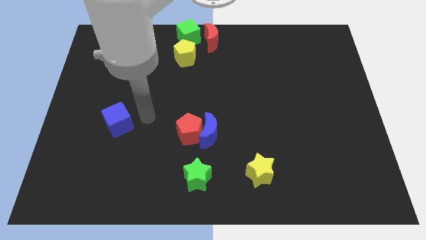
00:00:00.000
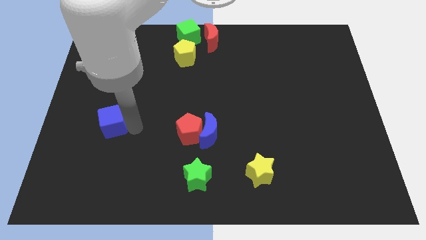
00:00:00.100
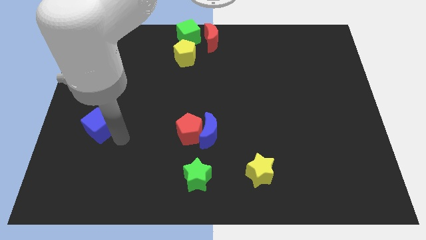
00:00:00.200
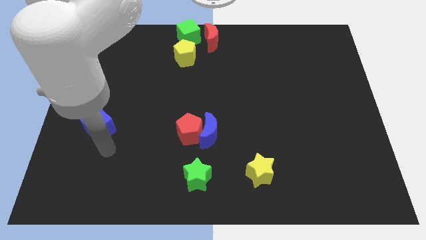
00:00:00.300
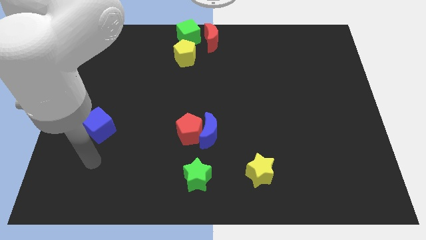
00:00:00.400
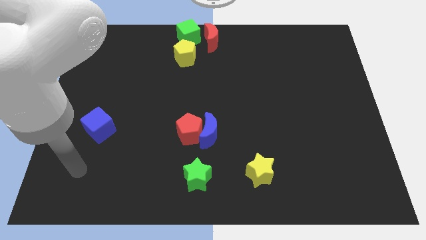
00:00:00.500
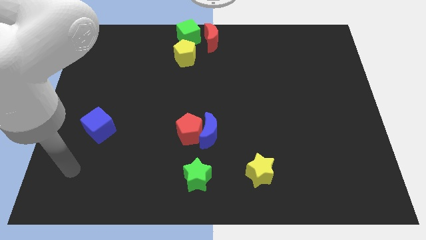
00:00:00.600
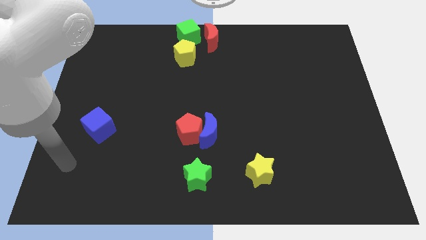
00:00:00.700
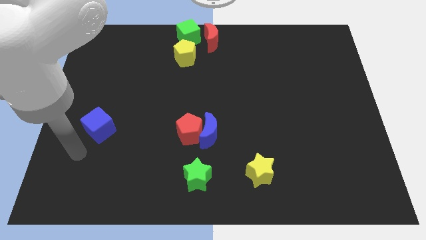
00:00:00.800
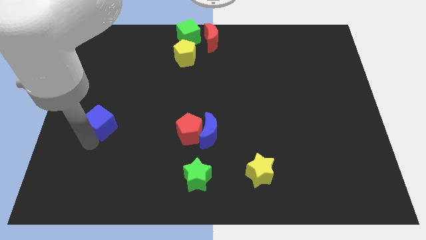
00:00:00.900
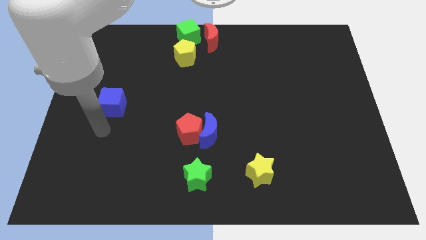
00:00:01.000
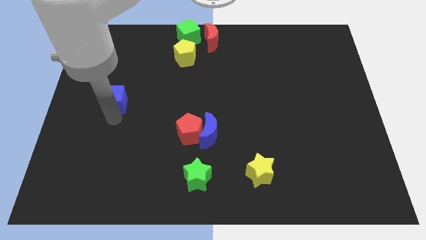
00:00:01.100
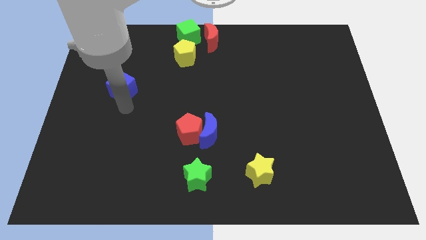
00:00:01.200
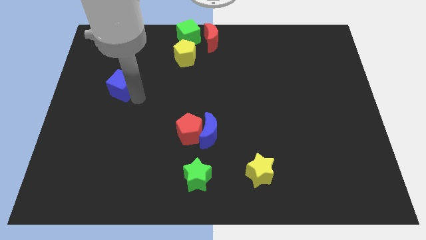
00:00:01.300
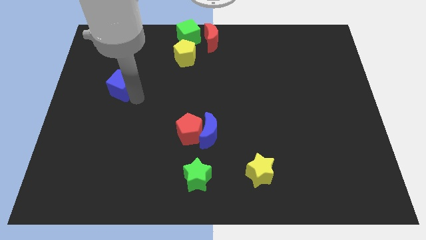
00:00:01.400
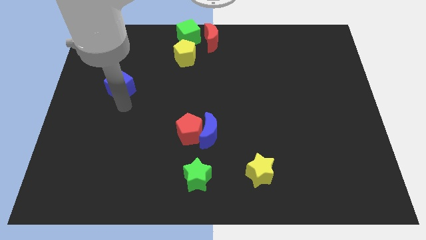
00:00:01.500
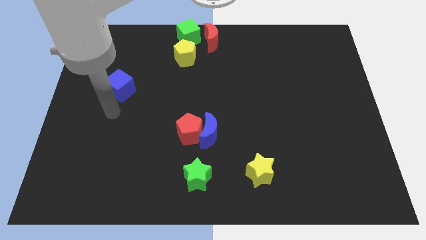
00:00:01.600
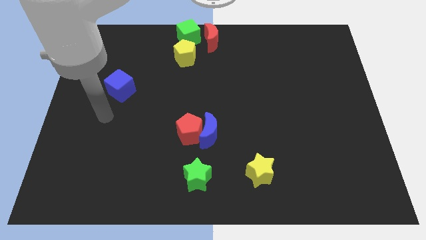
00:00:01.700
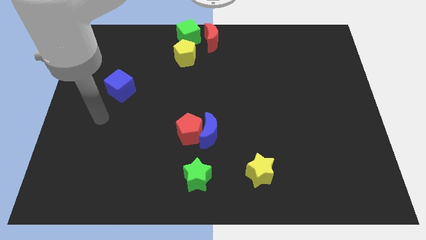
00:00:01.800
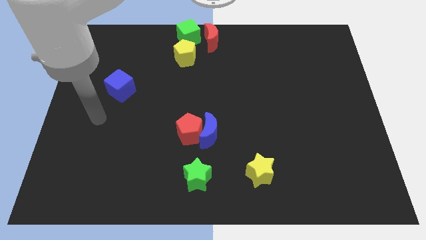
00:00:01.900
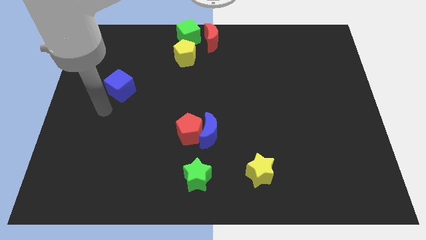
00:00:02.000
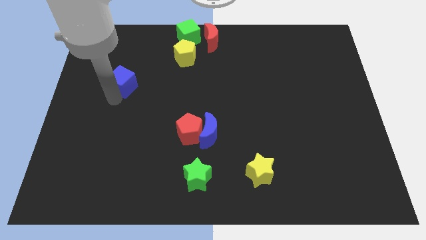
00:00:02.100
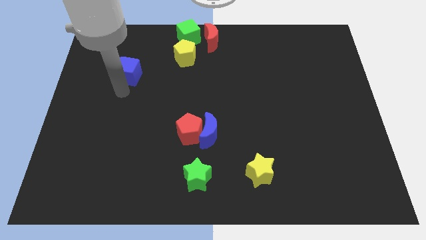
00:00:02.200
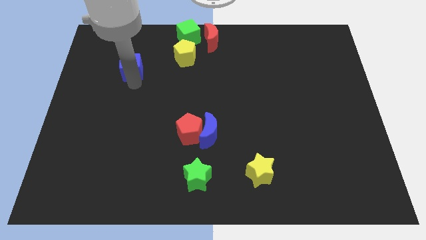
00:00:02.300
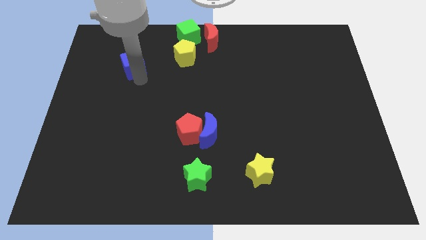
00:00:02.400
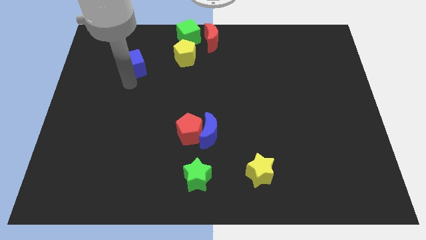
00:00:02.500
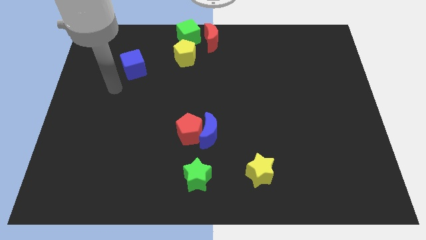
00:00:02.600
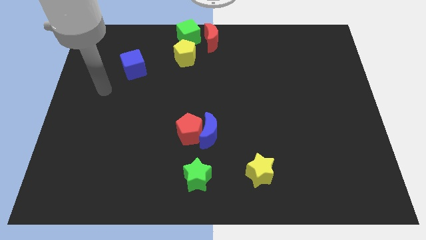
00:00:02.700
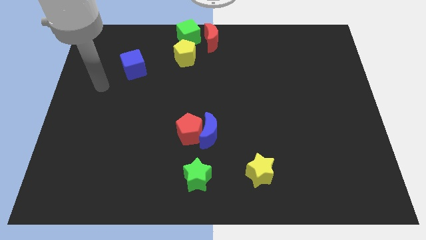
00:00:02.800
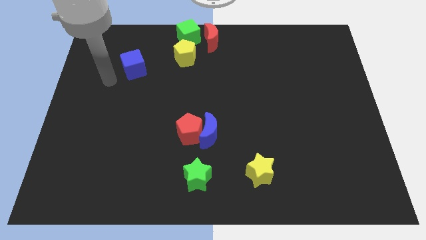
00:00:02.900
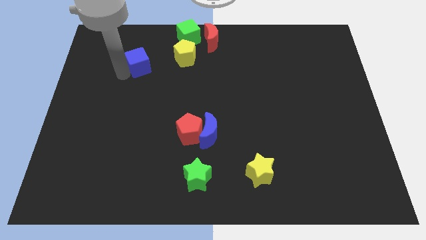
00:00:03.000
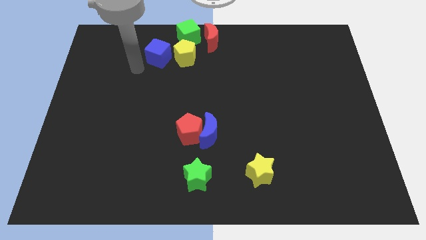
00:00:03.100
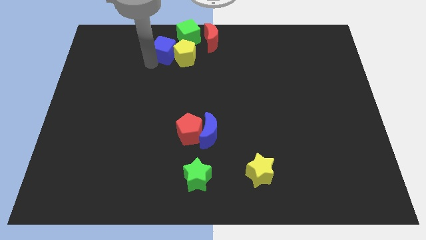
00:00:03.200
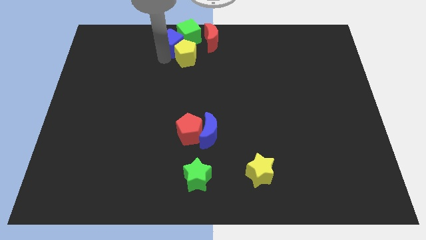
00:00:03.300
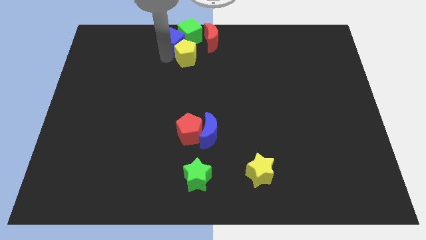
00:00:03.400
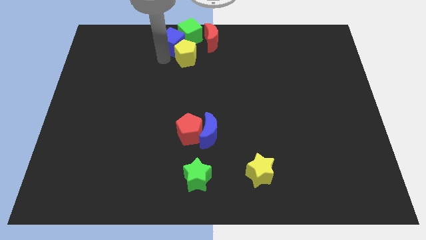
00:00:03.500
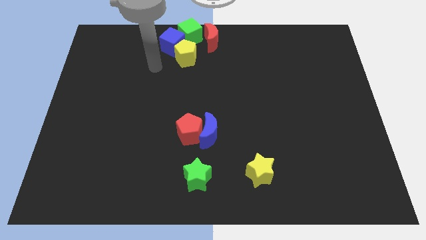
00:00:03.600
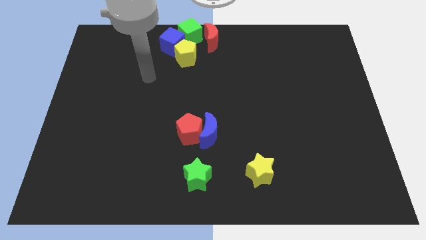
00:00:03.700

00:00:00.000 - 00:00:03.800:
push the blue cube towards the group of blocks at the top center of the board

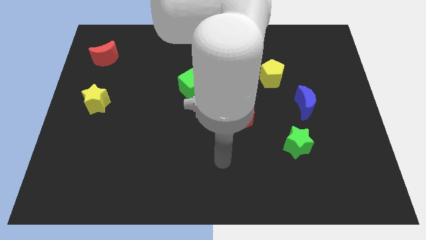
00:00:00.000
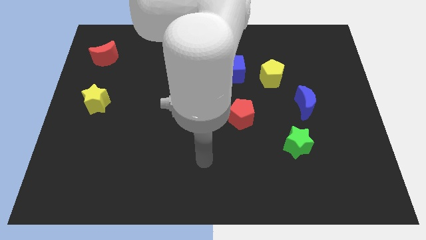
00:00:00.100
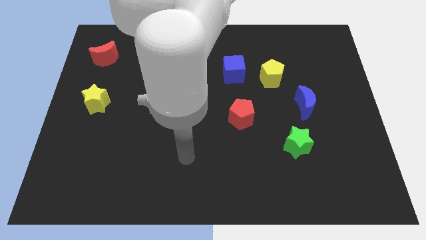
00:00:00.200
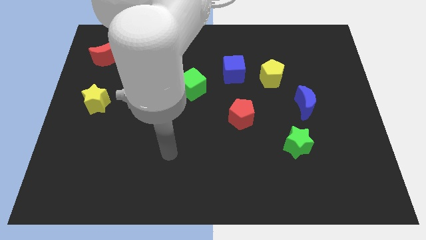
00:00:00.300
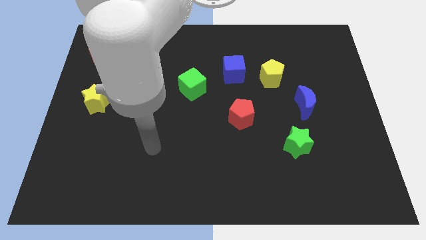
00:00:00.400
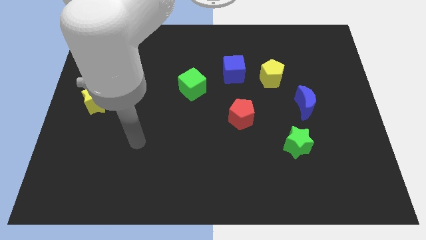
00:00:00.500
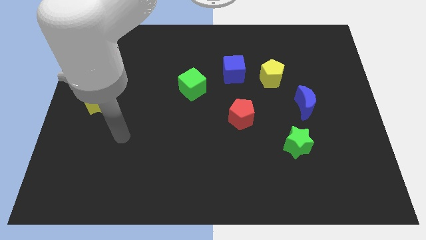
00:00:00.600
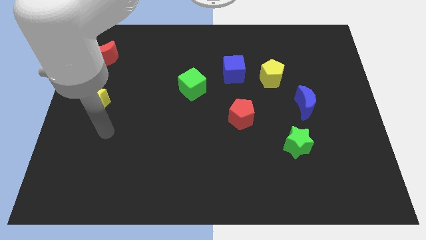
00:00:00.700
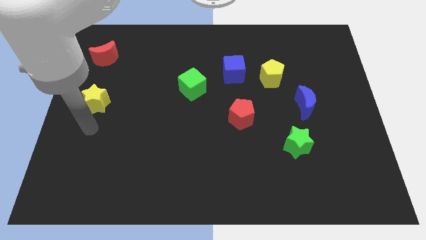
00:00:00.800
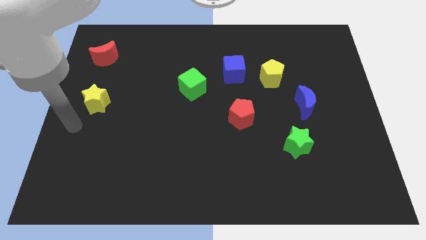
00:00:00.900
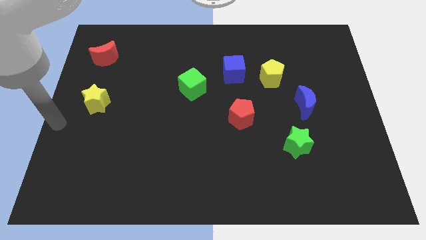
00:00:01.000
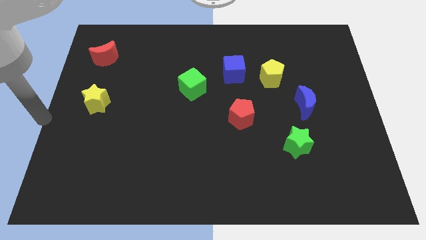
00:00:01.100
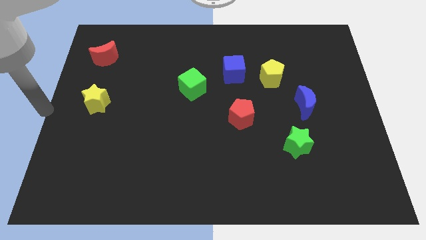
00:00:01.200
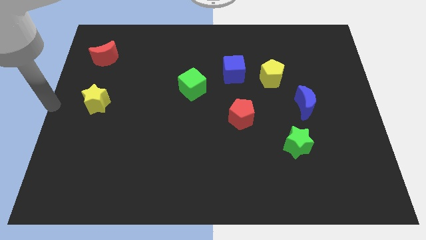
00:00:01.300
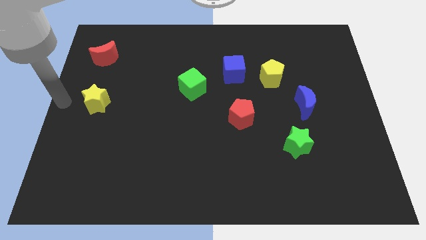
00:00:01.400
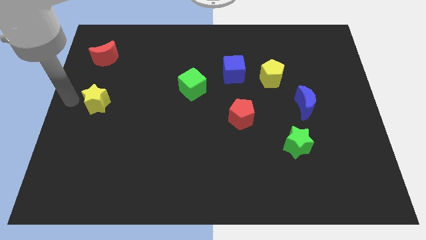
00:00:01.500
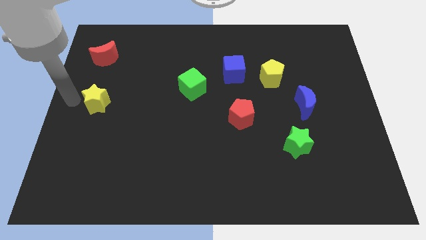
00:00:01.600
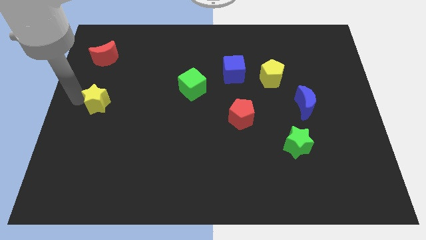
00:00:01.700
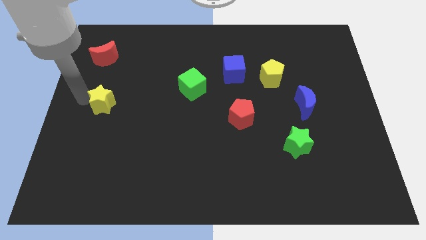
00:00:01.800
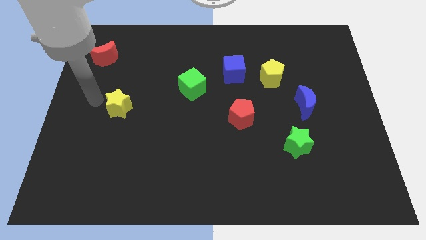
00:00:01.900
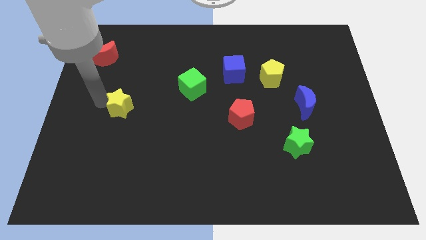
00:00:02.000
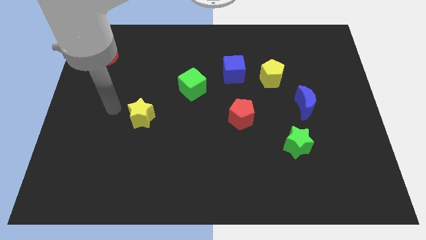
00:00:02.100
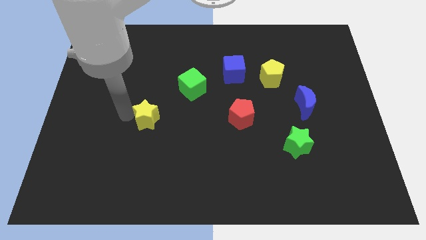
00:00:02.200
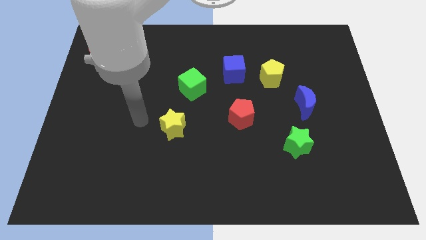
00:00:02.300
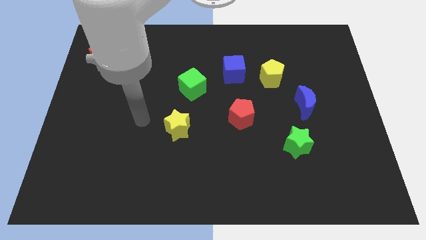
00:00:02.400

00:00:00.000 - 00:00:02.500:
place the yellow star below the green cube

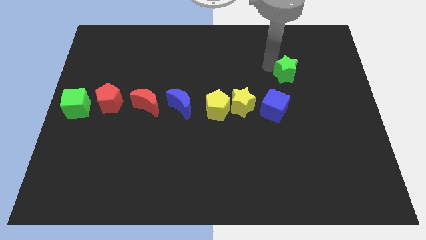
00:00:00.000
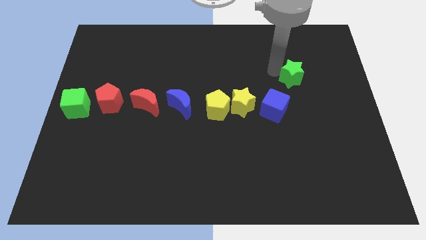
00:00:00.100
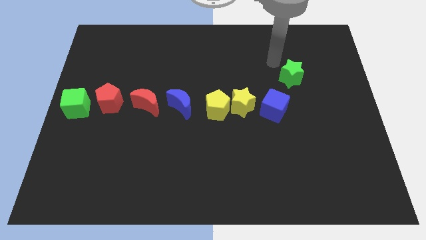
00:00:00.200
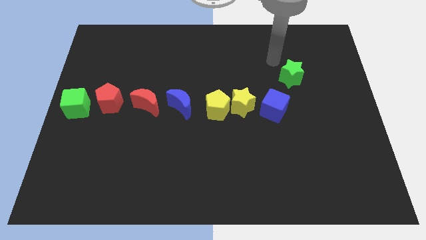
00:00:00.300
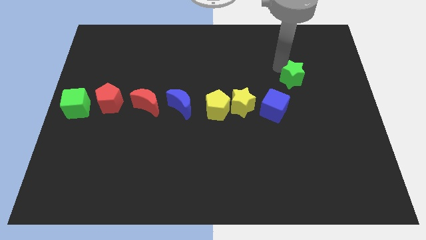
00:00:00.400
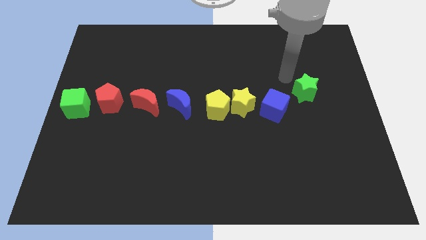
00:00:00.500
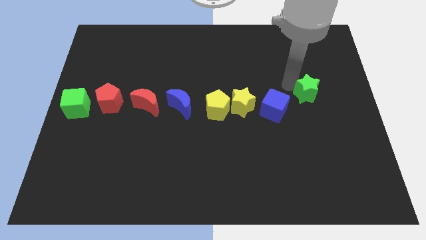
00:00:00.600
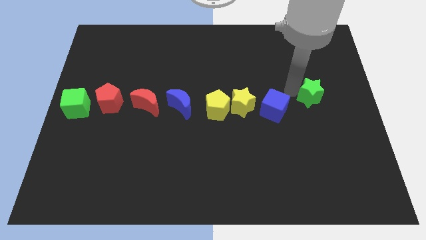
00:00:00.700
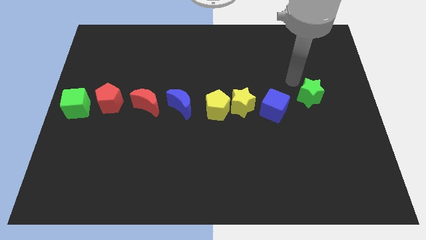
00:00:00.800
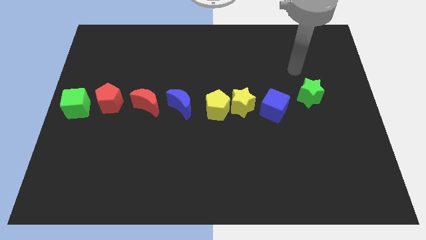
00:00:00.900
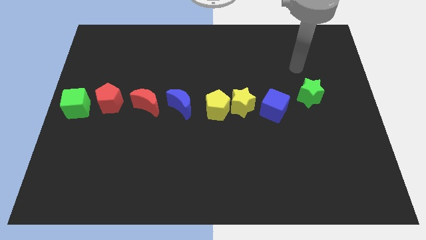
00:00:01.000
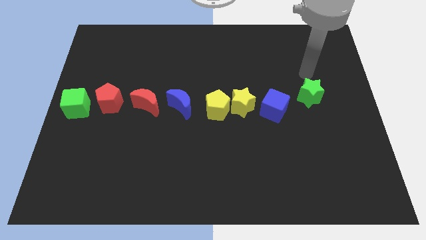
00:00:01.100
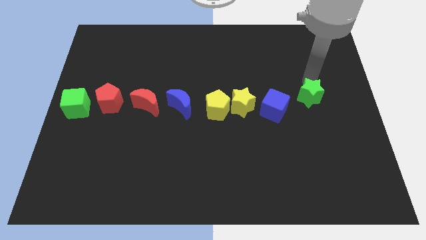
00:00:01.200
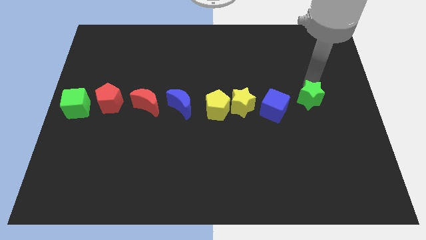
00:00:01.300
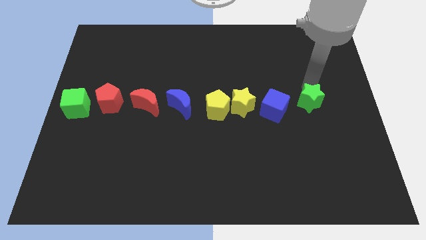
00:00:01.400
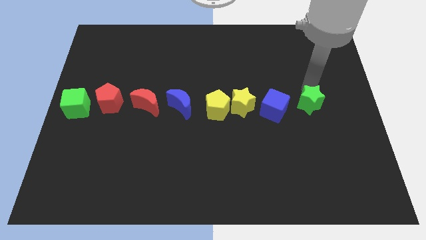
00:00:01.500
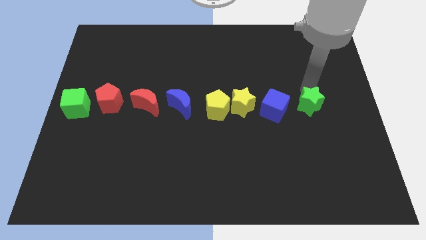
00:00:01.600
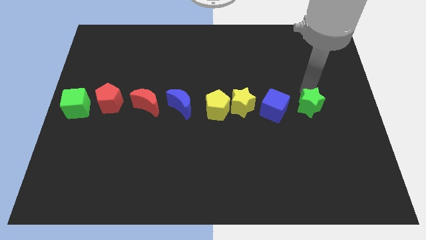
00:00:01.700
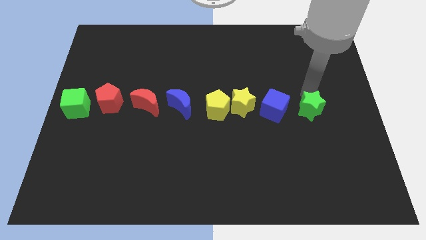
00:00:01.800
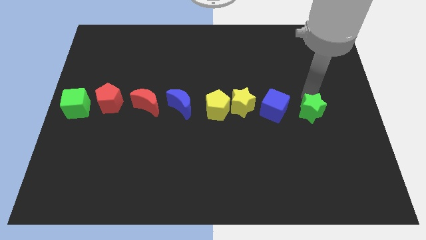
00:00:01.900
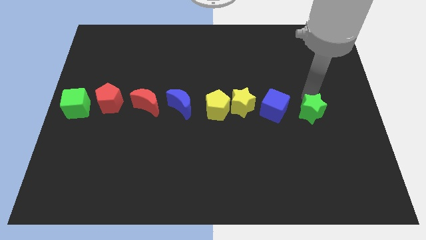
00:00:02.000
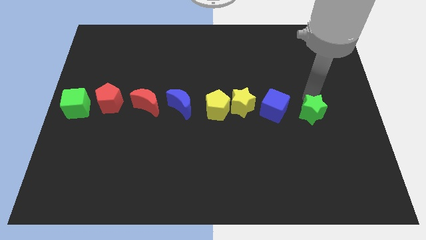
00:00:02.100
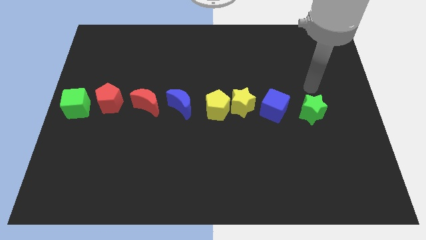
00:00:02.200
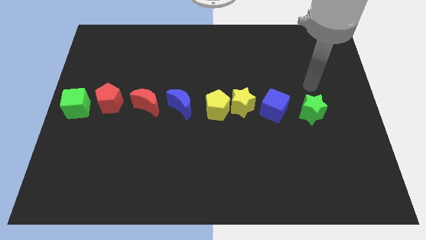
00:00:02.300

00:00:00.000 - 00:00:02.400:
place the green star parallel to blue cube

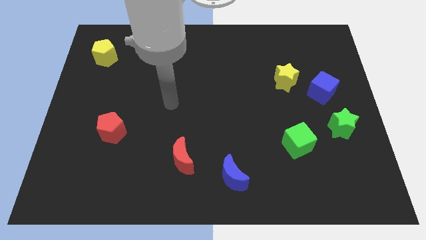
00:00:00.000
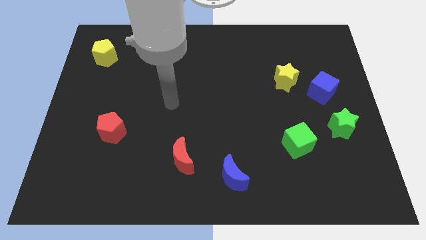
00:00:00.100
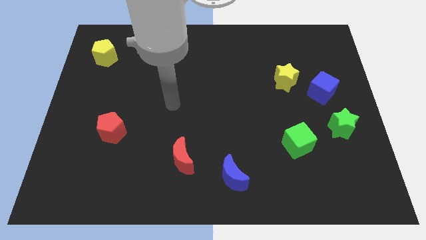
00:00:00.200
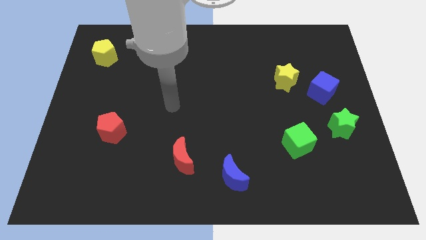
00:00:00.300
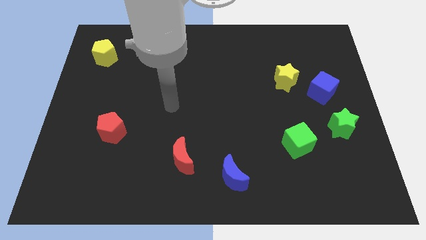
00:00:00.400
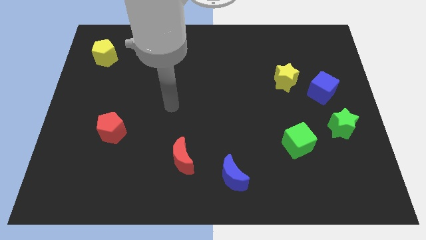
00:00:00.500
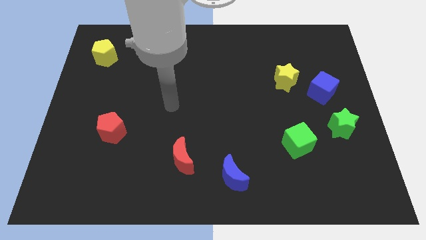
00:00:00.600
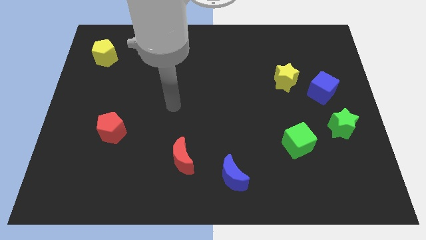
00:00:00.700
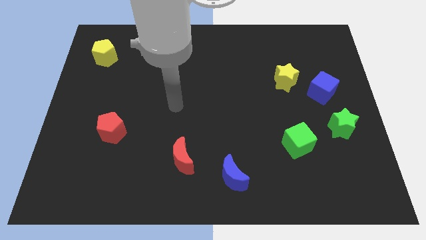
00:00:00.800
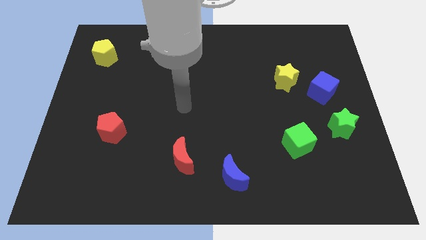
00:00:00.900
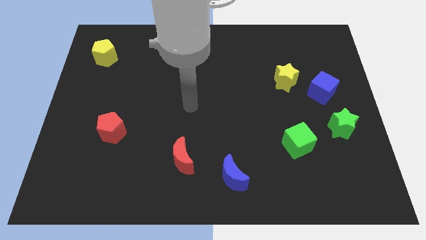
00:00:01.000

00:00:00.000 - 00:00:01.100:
slide your arm towards center
